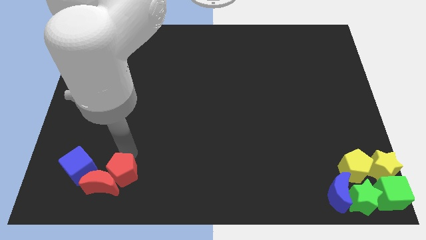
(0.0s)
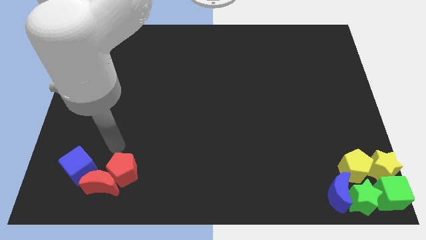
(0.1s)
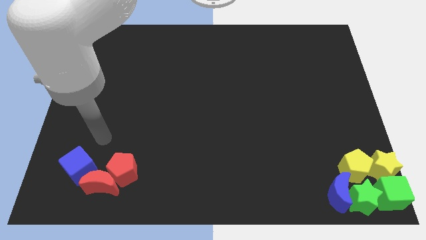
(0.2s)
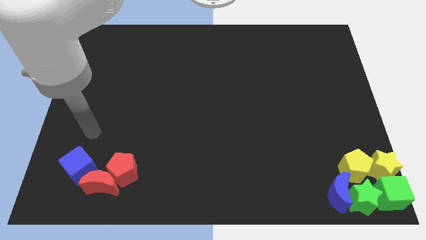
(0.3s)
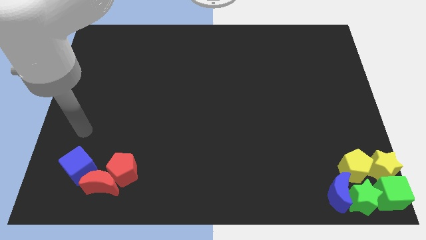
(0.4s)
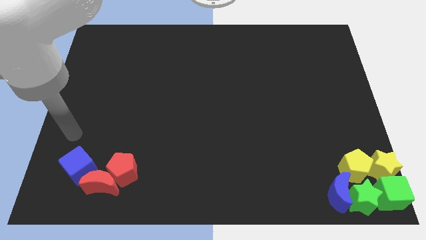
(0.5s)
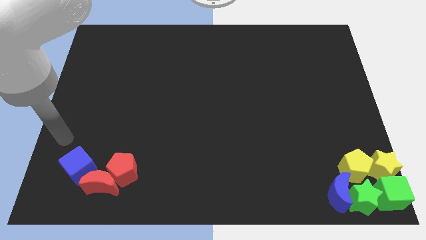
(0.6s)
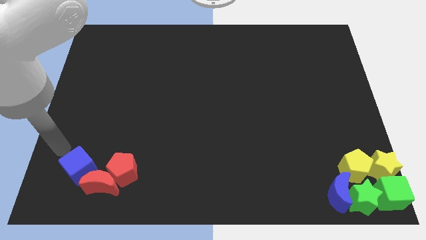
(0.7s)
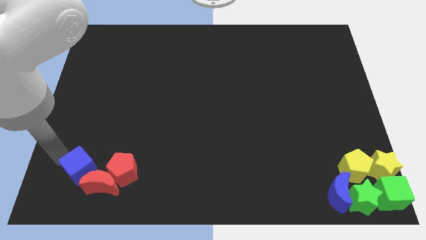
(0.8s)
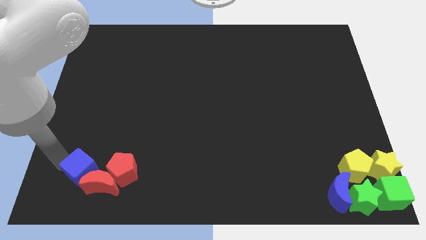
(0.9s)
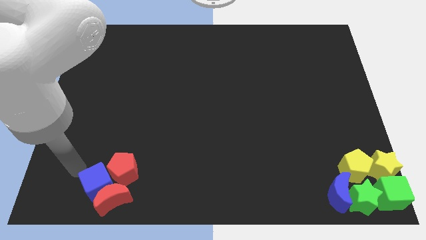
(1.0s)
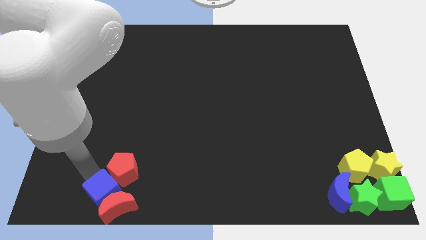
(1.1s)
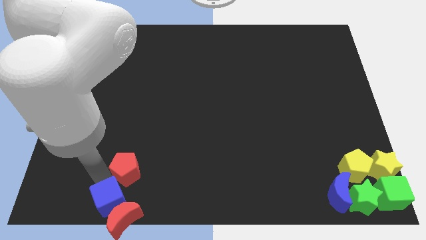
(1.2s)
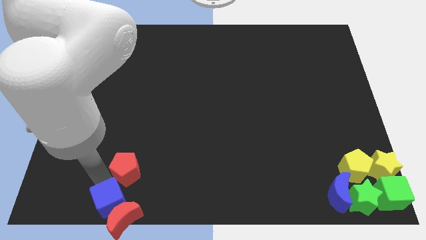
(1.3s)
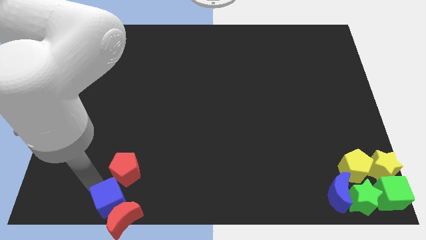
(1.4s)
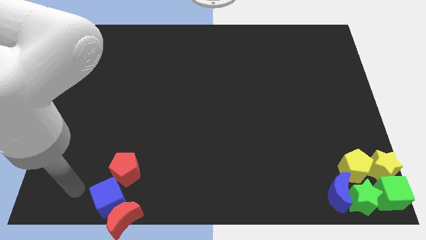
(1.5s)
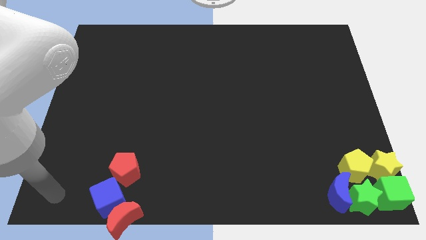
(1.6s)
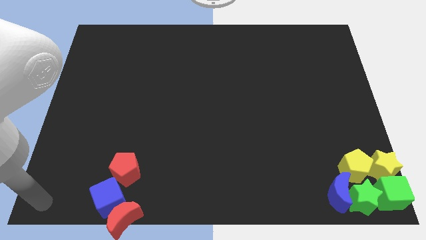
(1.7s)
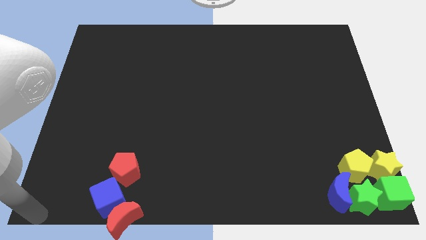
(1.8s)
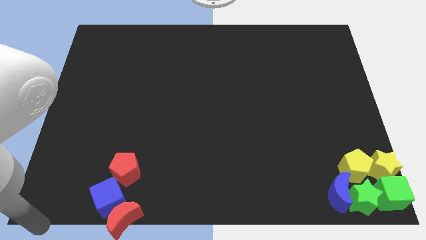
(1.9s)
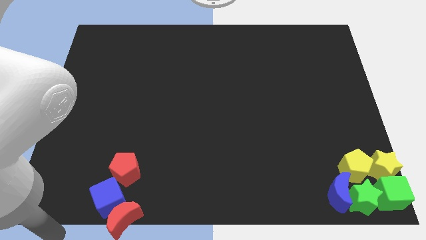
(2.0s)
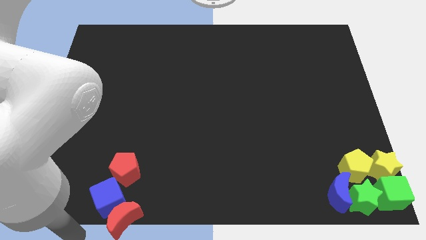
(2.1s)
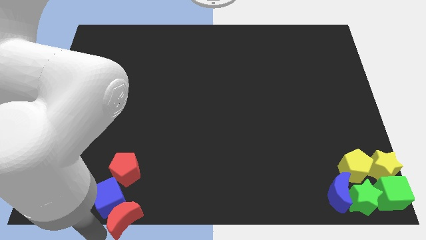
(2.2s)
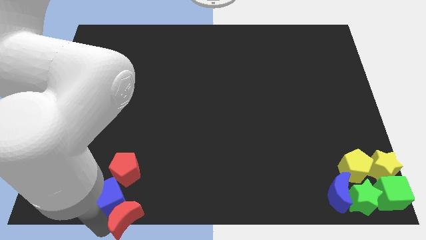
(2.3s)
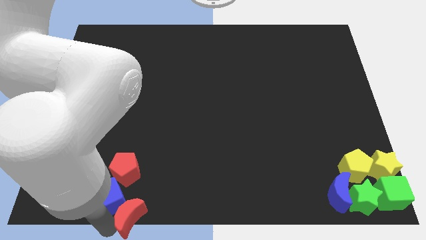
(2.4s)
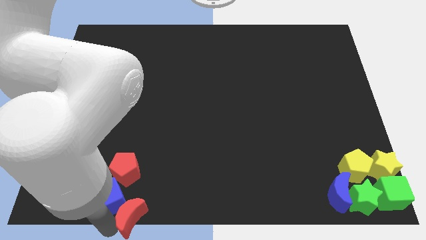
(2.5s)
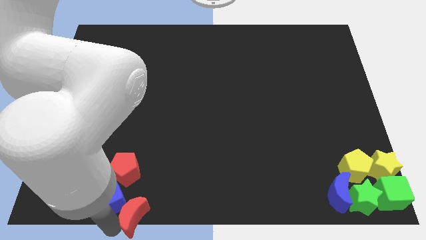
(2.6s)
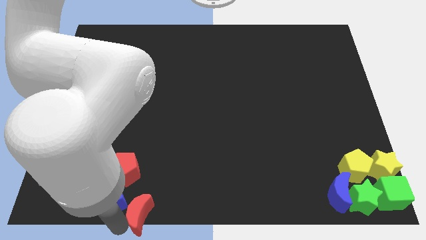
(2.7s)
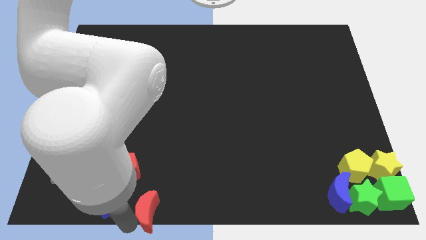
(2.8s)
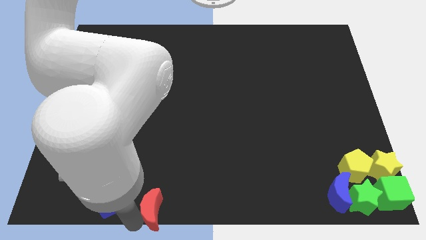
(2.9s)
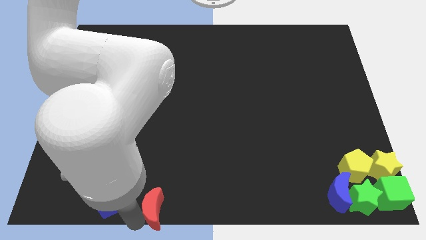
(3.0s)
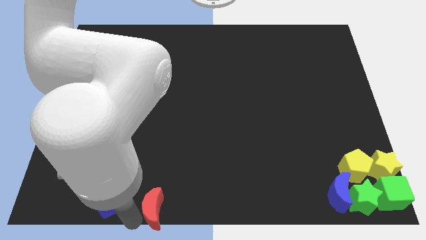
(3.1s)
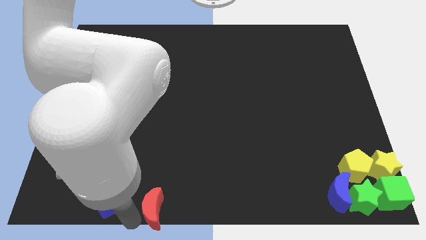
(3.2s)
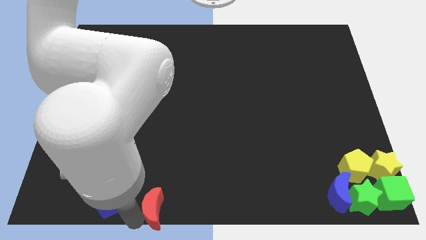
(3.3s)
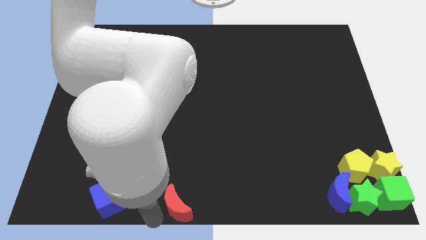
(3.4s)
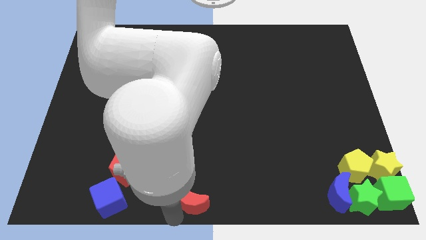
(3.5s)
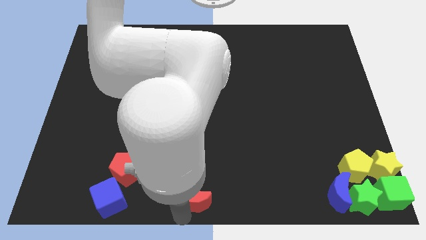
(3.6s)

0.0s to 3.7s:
separate the red crescent from the blue cube

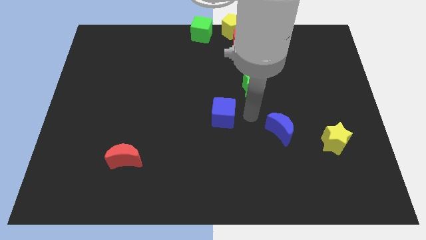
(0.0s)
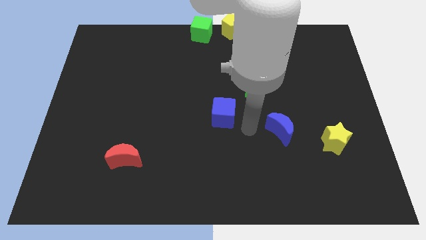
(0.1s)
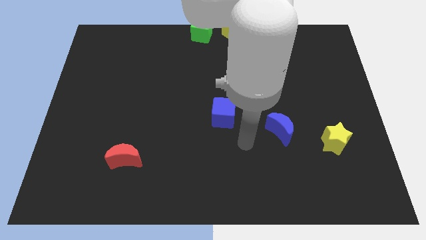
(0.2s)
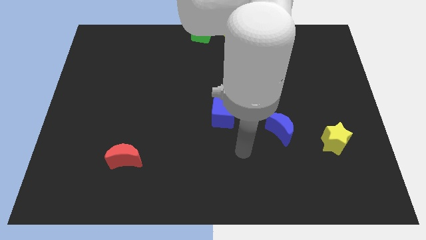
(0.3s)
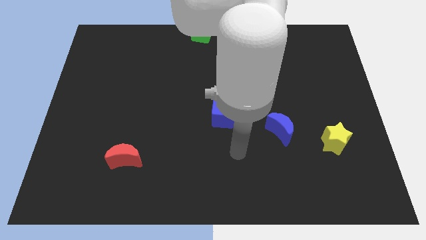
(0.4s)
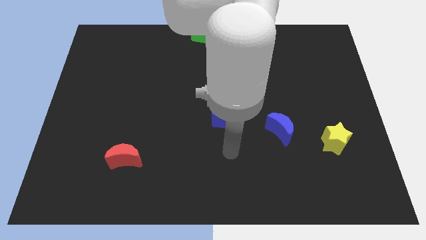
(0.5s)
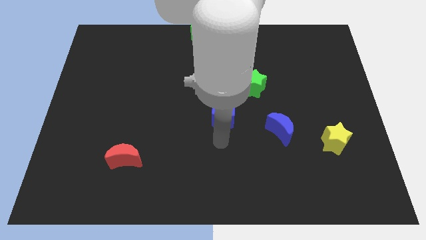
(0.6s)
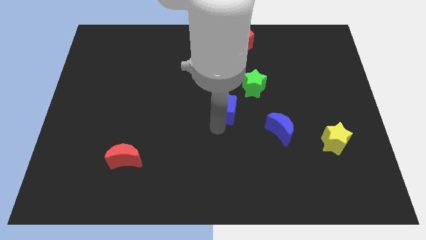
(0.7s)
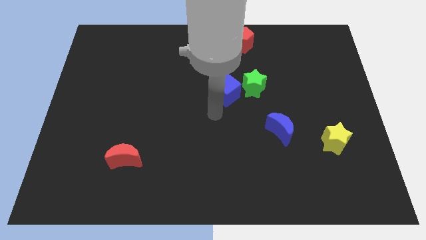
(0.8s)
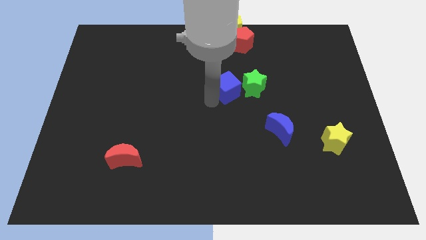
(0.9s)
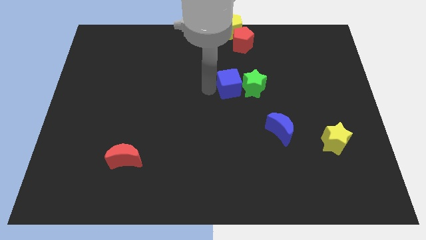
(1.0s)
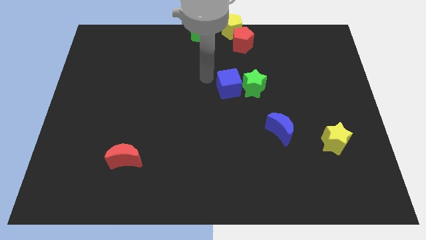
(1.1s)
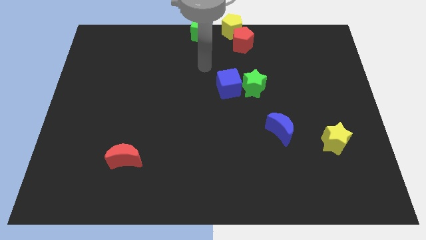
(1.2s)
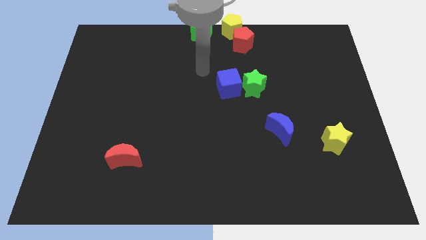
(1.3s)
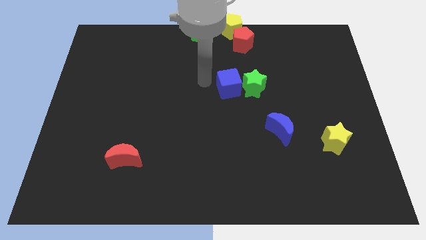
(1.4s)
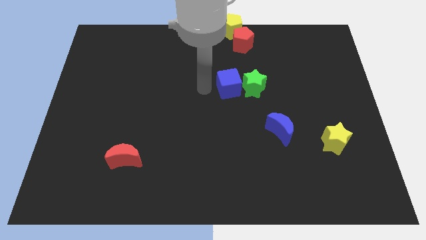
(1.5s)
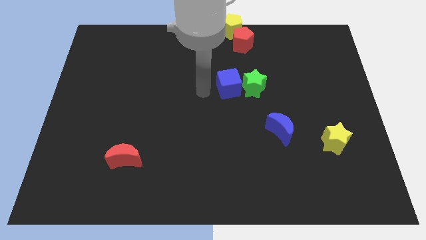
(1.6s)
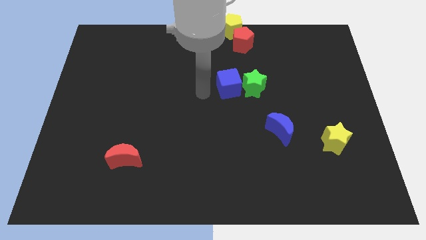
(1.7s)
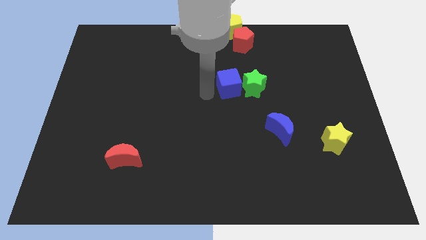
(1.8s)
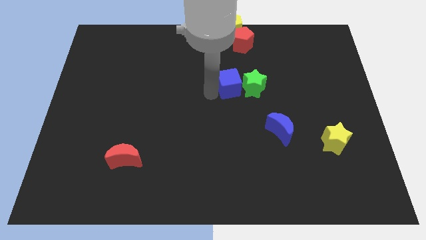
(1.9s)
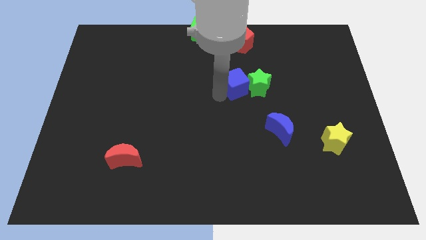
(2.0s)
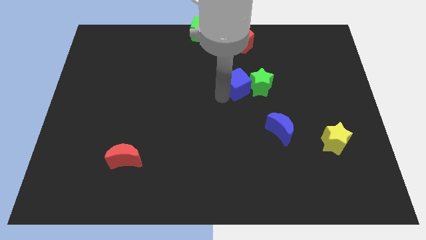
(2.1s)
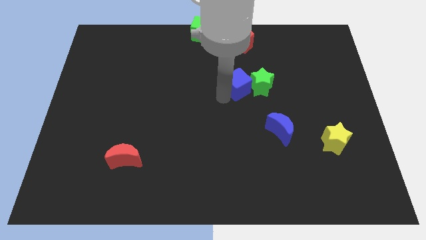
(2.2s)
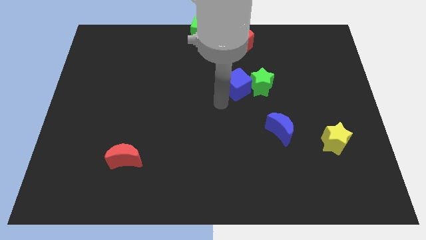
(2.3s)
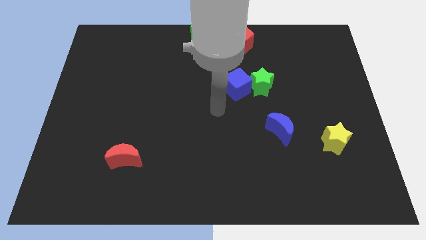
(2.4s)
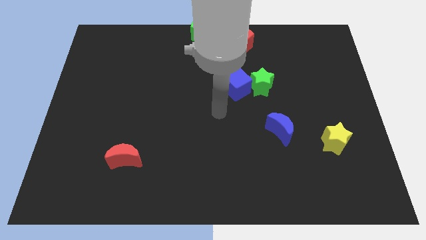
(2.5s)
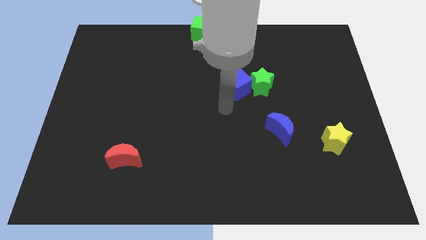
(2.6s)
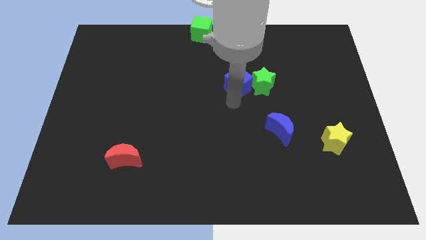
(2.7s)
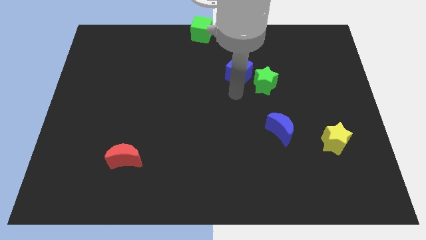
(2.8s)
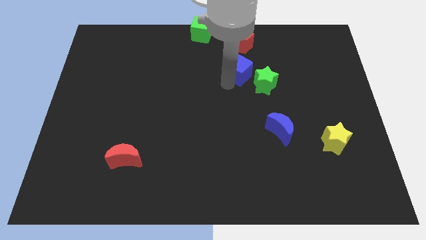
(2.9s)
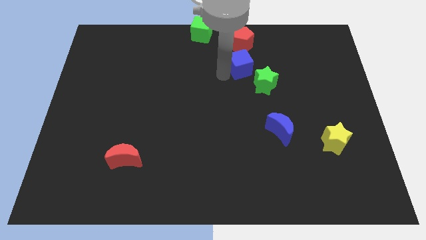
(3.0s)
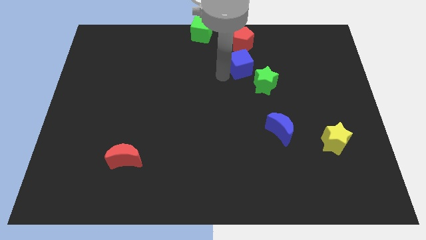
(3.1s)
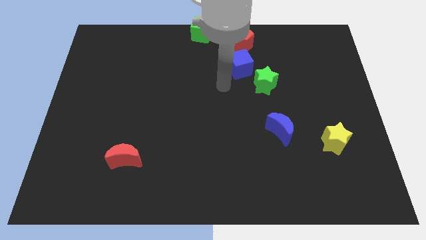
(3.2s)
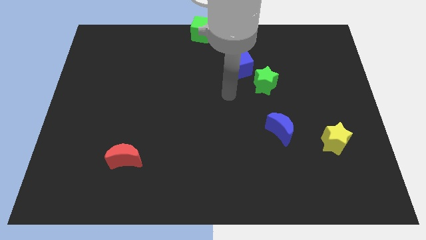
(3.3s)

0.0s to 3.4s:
push the blue cube and green star towards the top right side of the board

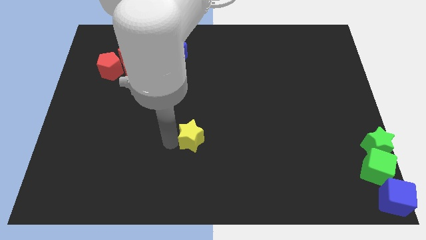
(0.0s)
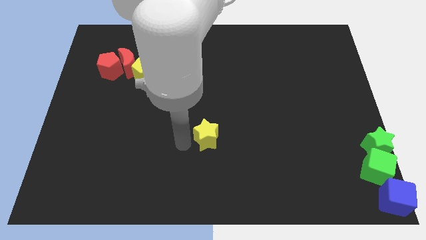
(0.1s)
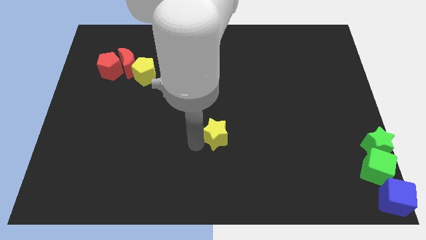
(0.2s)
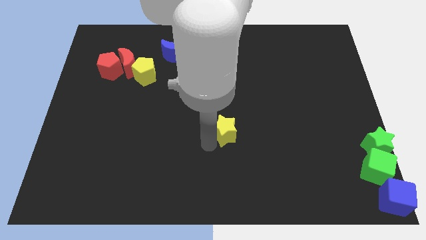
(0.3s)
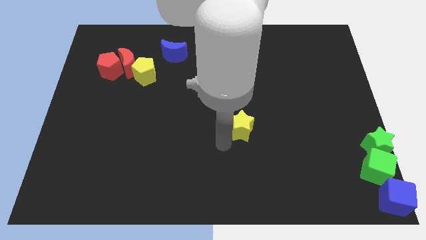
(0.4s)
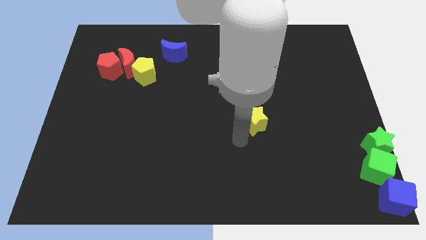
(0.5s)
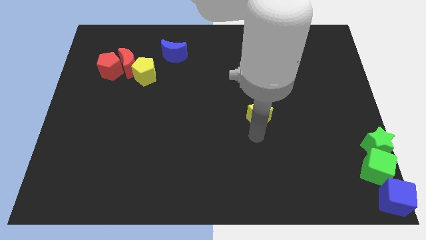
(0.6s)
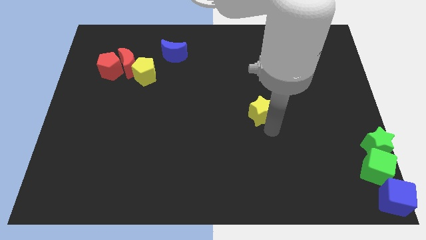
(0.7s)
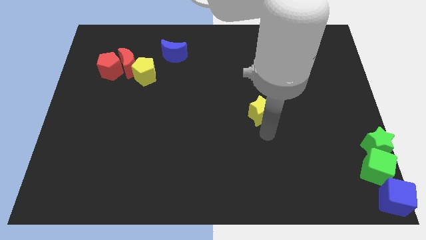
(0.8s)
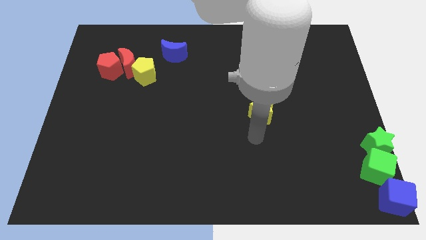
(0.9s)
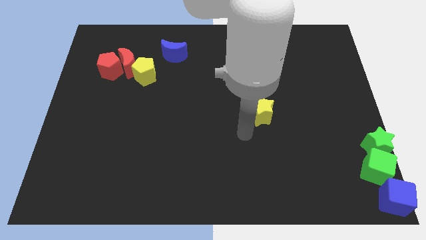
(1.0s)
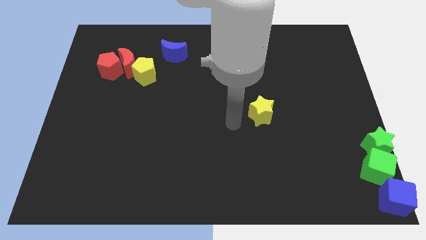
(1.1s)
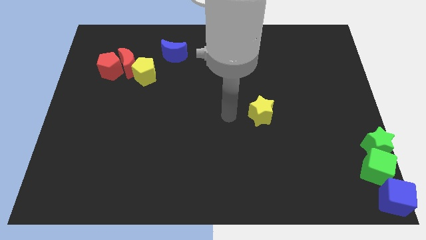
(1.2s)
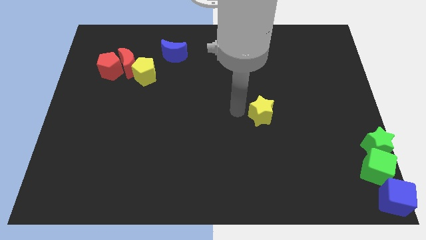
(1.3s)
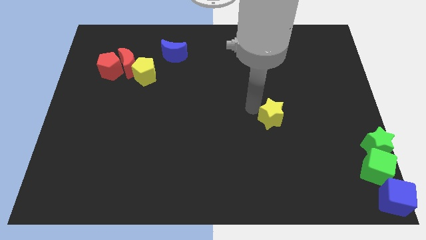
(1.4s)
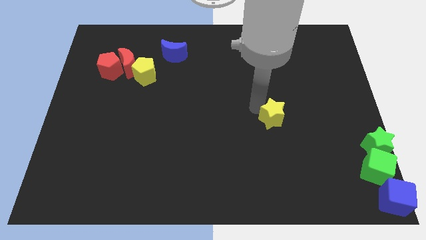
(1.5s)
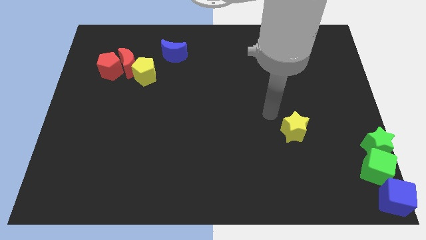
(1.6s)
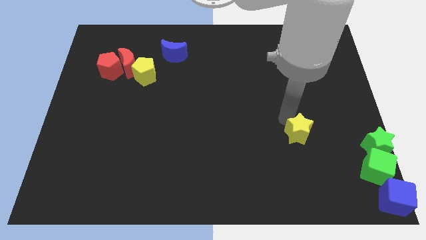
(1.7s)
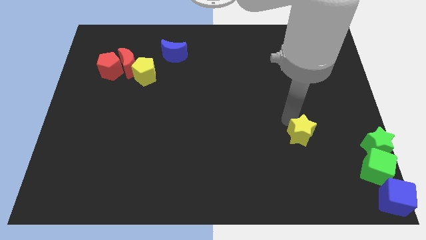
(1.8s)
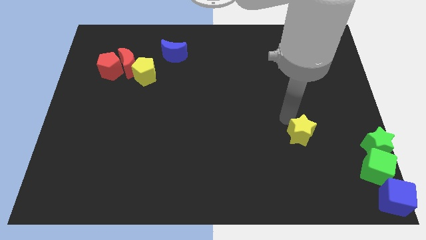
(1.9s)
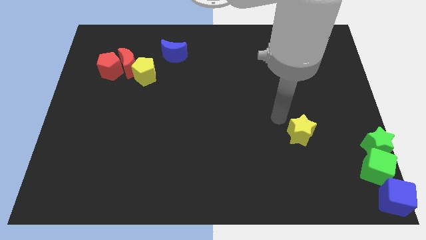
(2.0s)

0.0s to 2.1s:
push the yellow star towards the right side of the board
